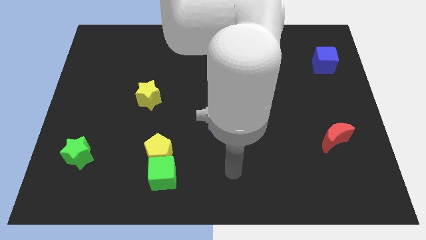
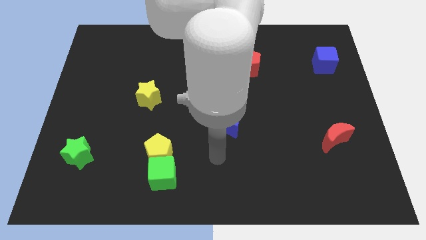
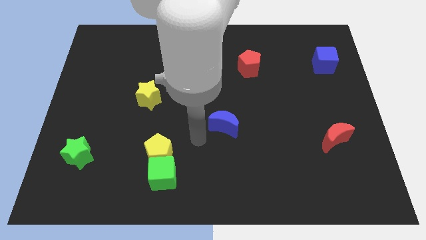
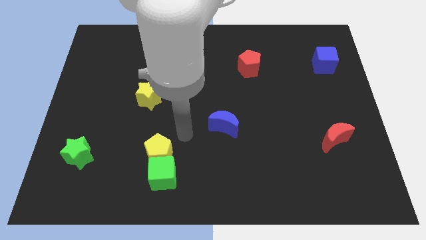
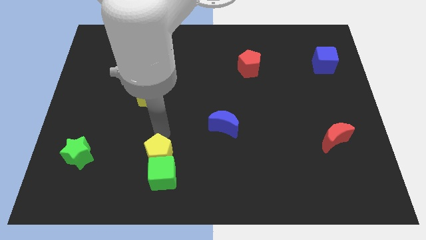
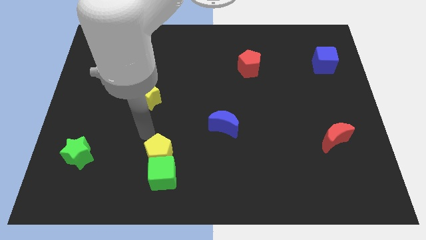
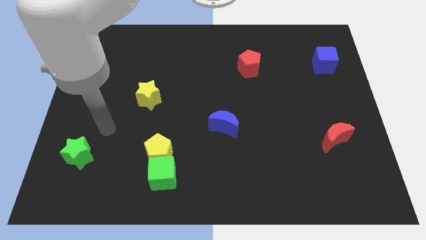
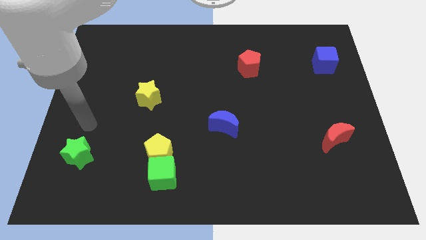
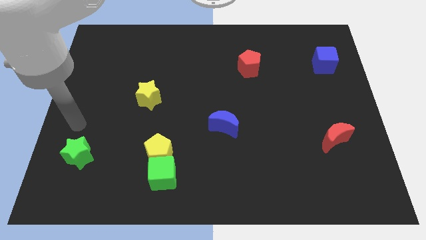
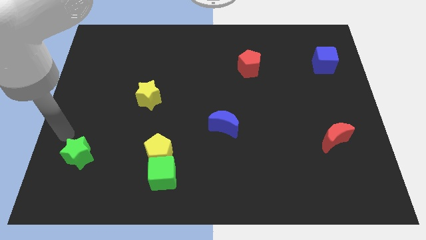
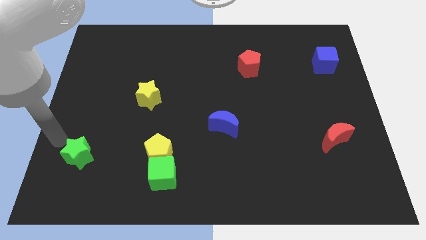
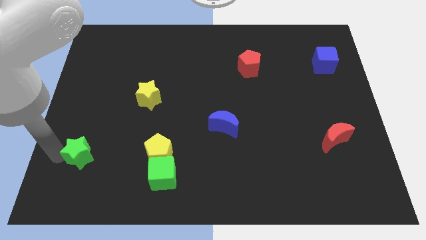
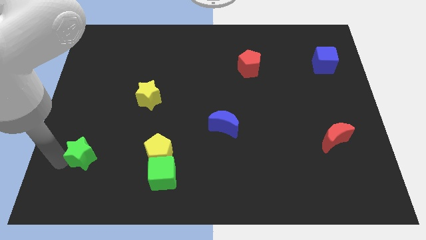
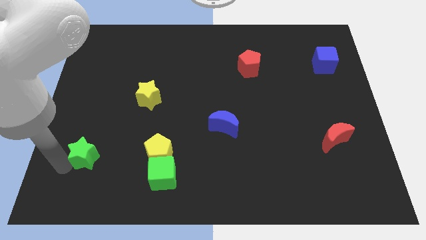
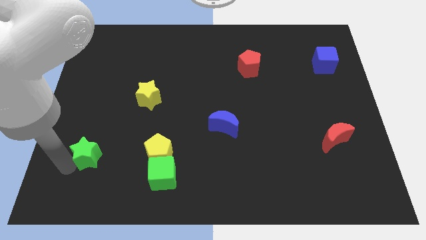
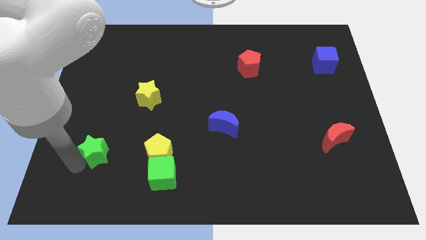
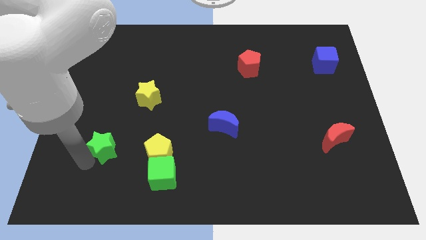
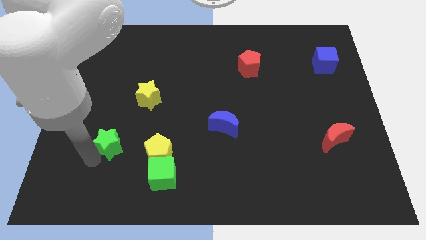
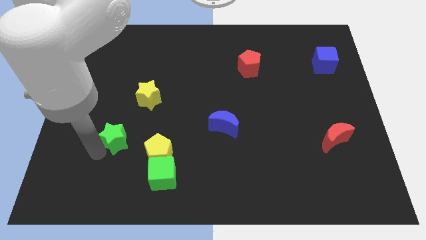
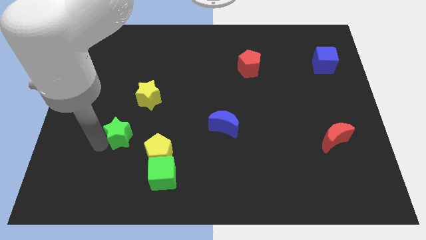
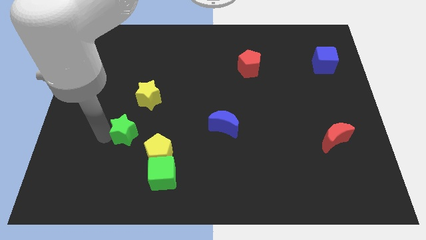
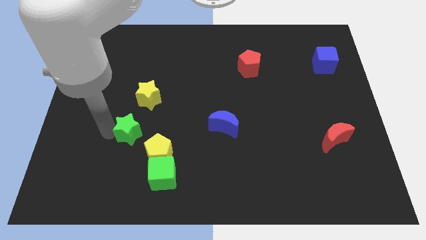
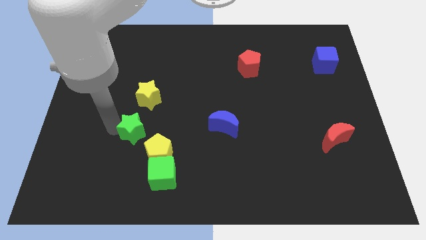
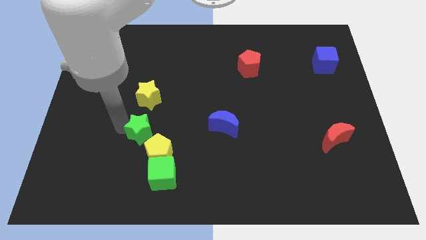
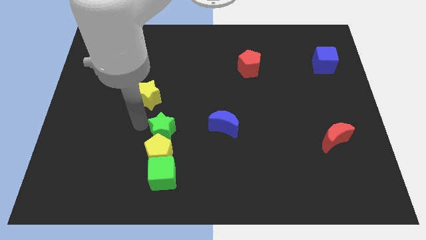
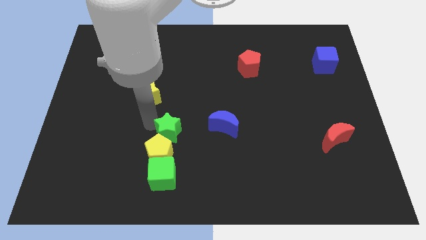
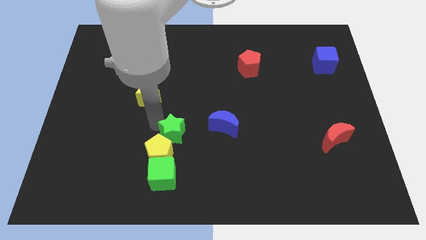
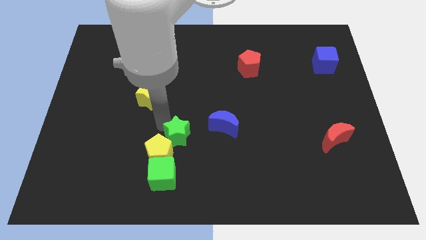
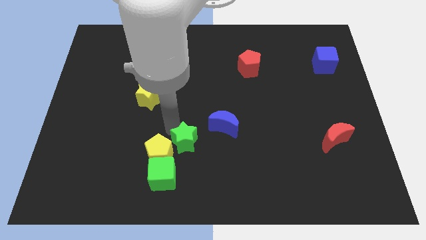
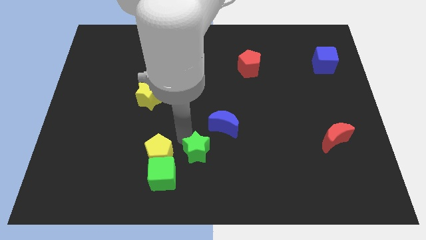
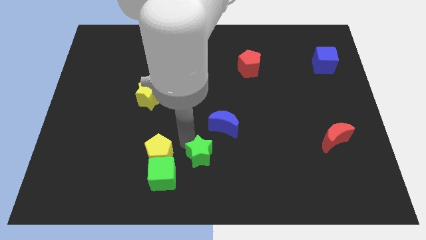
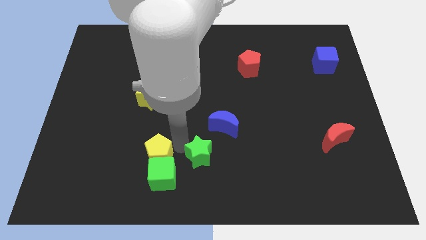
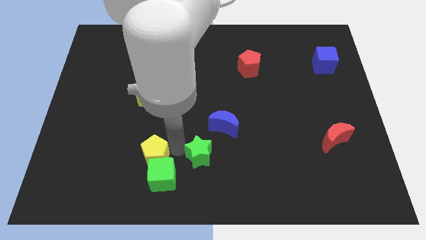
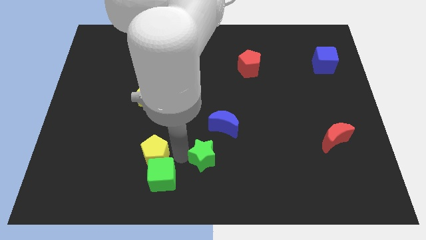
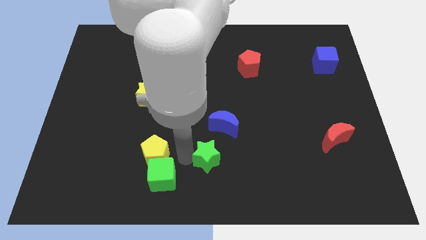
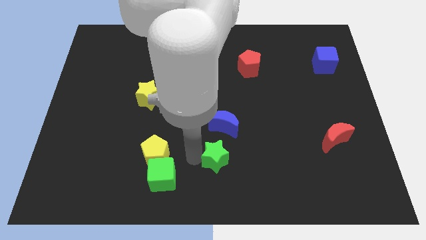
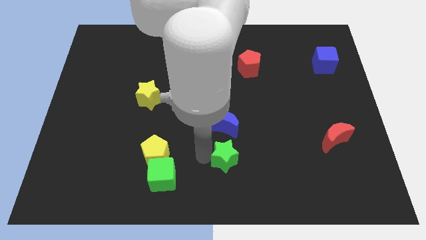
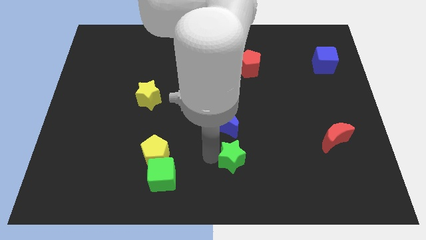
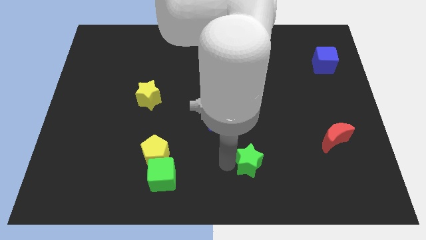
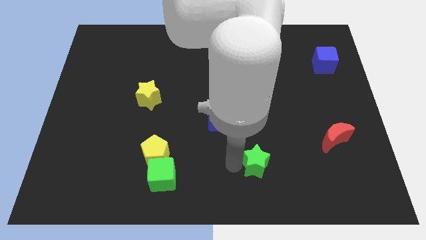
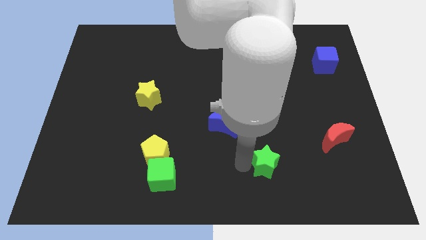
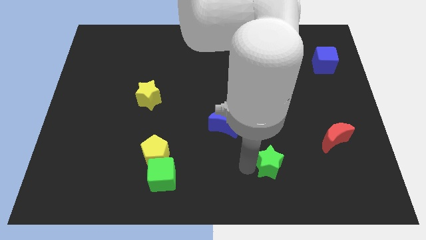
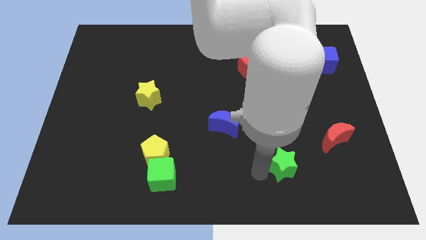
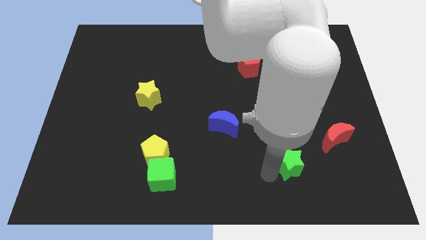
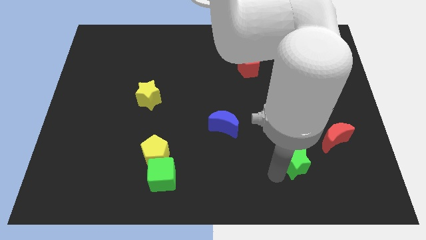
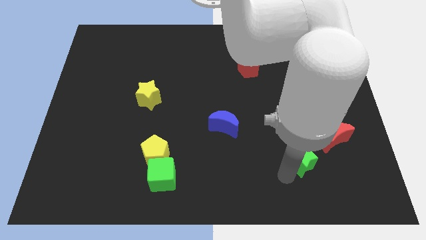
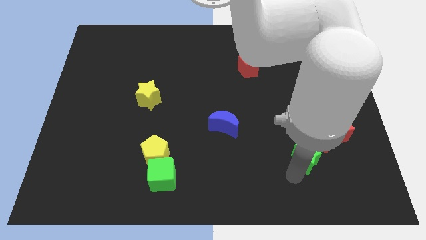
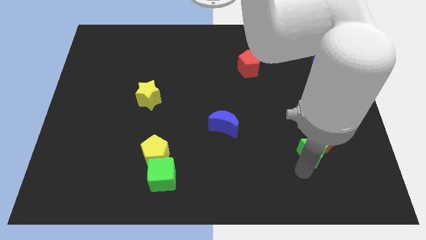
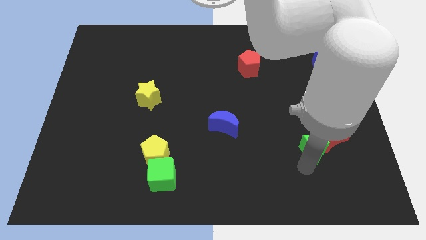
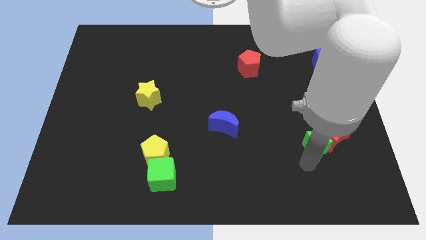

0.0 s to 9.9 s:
slide the green star towards the red moon

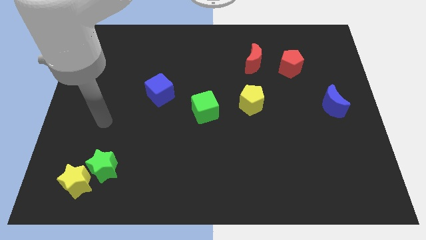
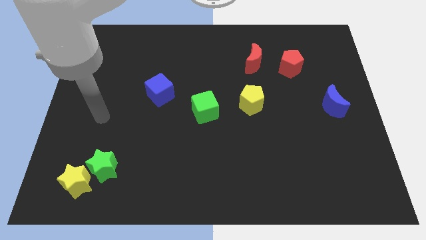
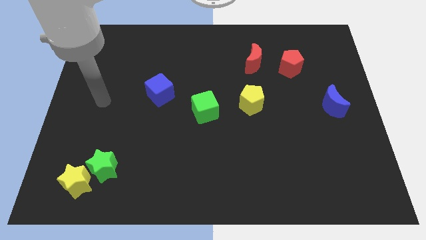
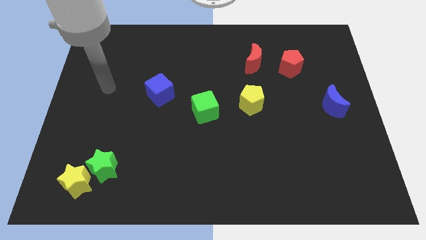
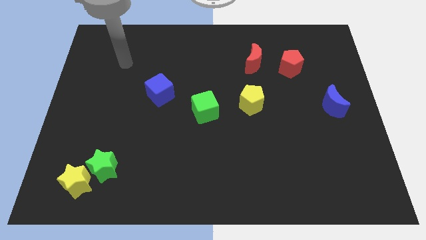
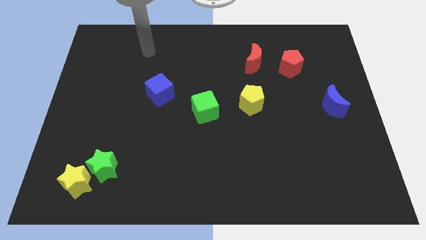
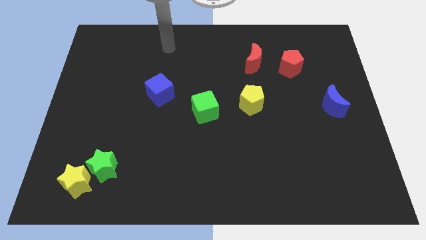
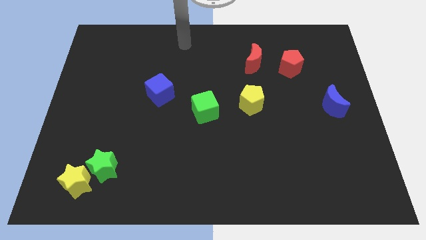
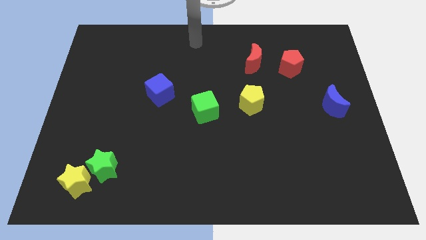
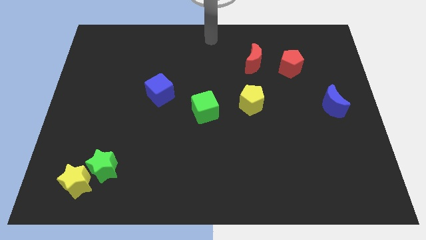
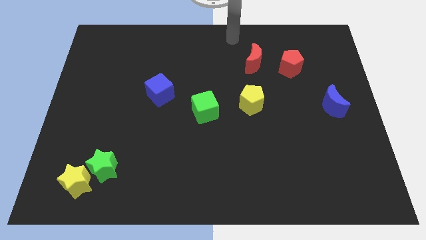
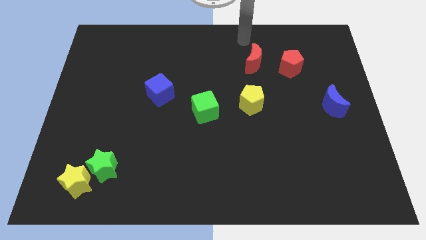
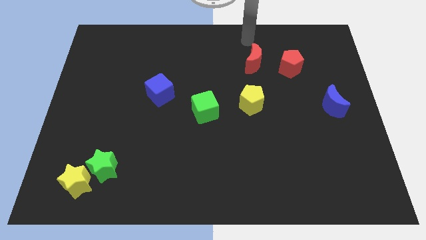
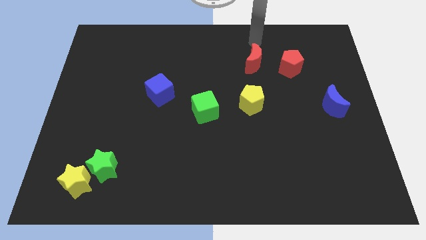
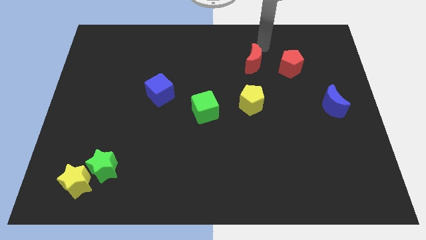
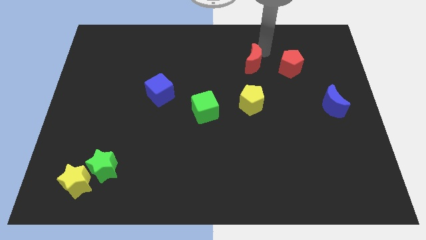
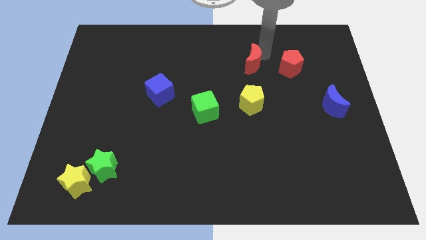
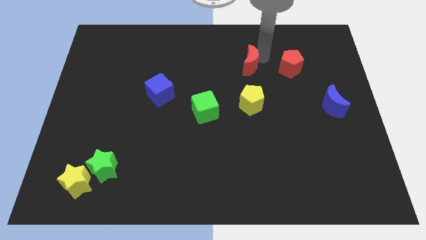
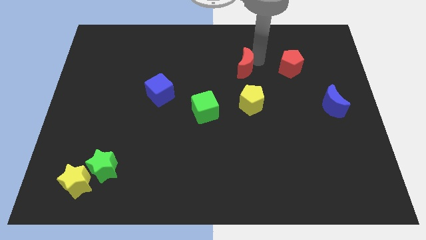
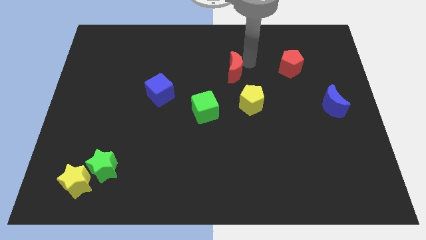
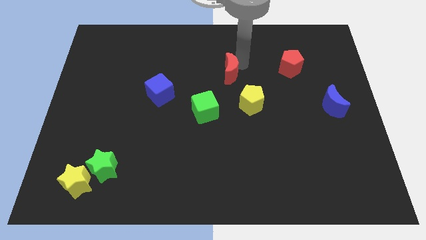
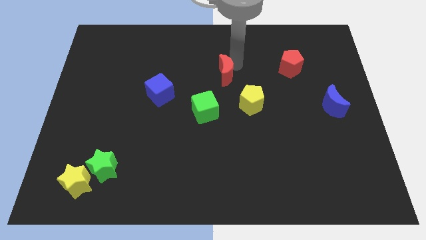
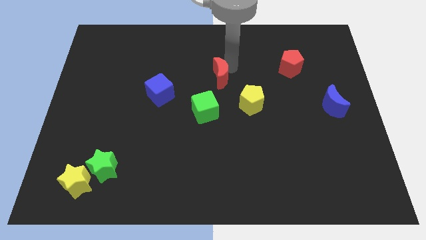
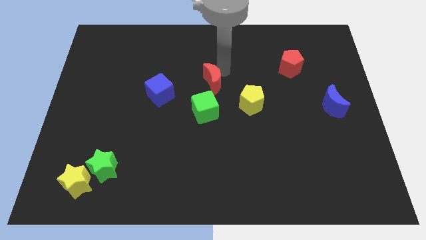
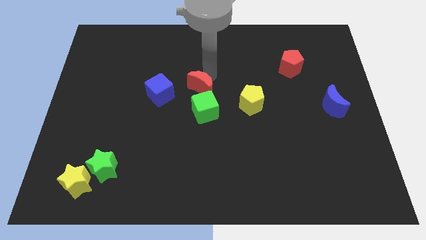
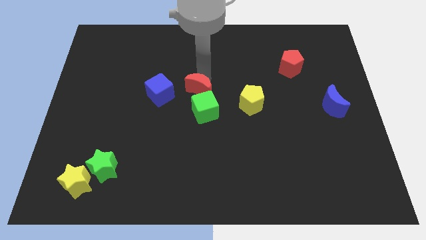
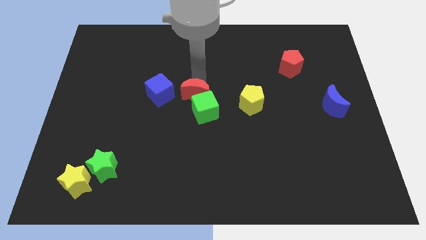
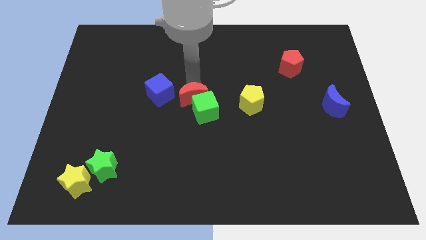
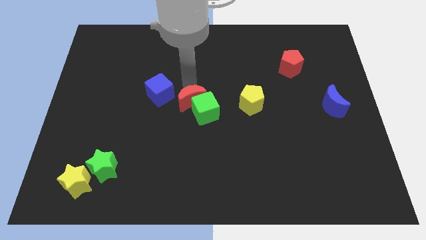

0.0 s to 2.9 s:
slide the red moon towards the green cube
